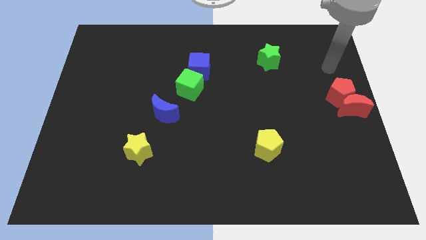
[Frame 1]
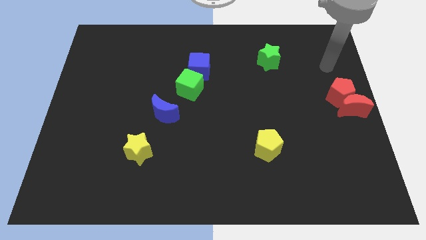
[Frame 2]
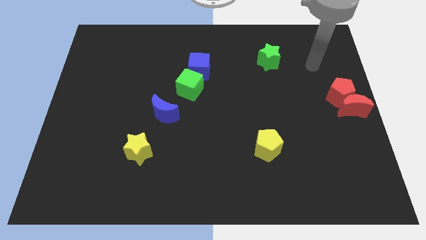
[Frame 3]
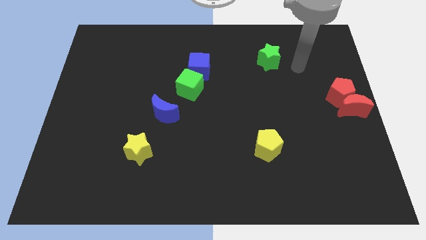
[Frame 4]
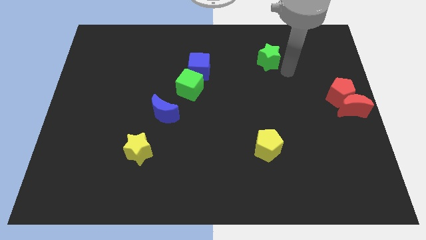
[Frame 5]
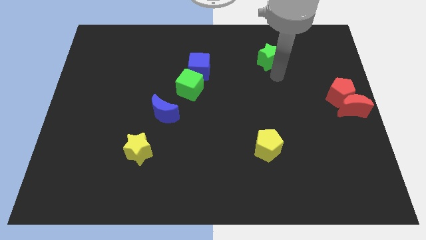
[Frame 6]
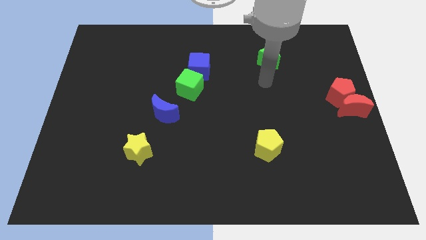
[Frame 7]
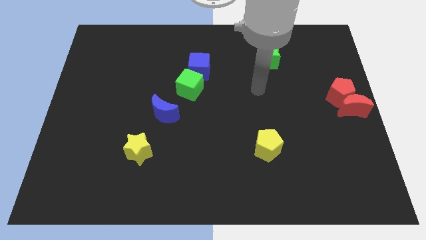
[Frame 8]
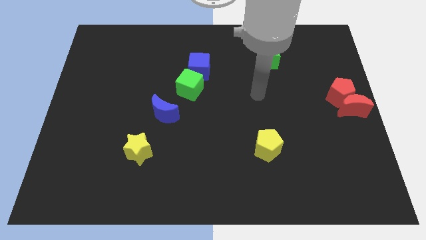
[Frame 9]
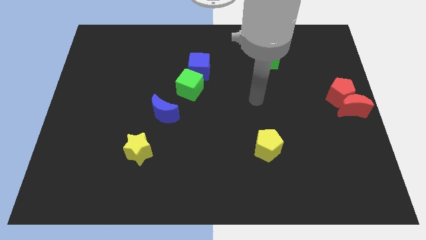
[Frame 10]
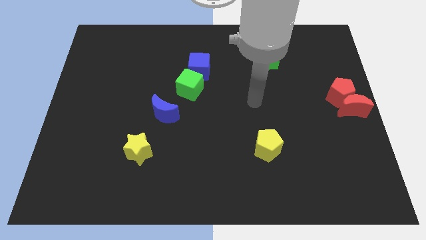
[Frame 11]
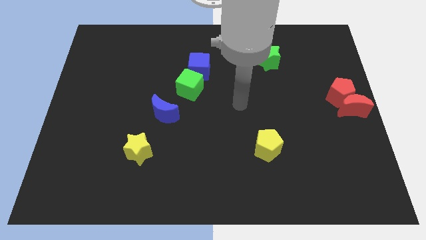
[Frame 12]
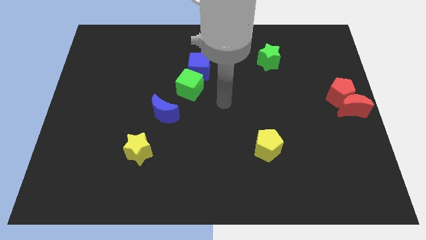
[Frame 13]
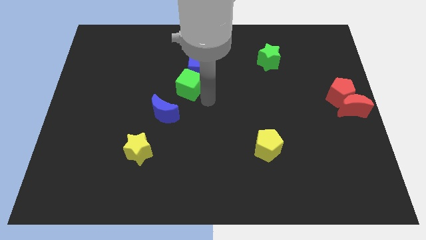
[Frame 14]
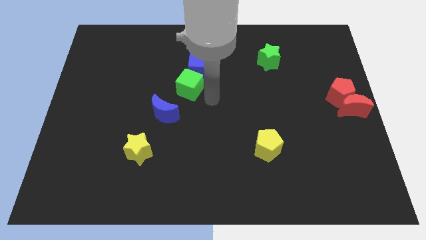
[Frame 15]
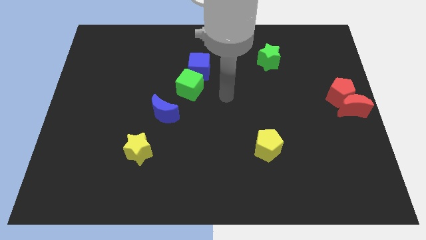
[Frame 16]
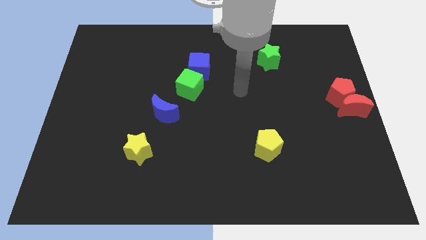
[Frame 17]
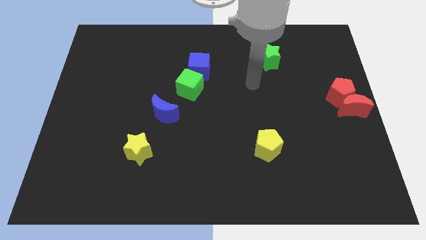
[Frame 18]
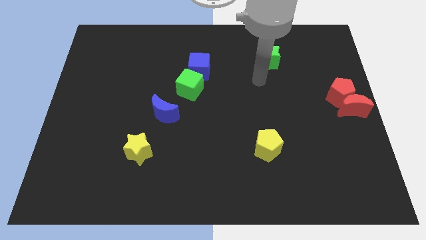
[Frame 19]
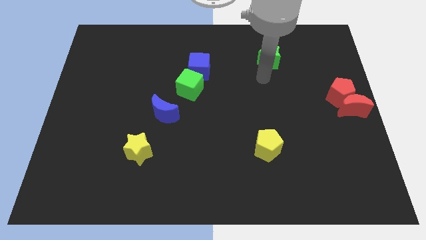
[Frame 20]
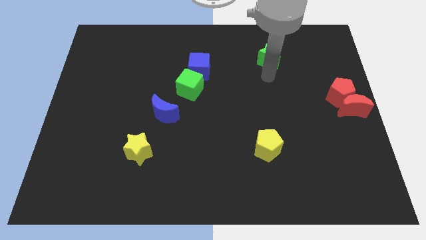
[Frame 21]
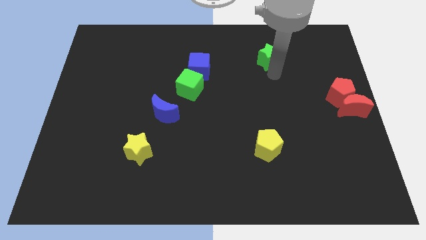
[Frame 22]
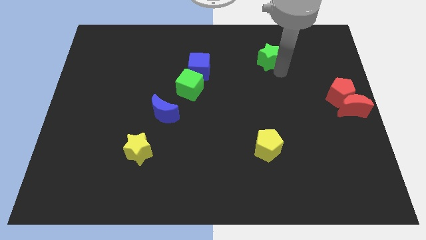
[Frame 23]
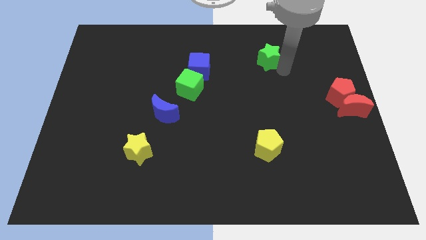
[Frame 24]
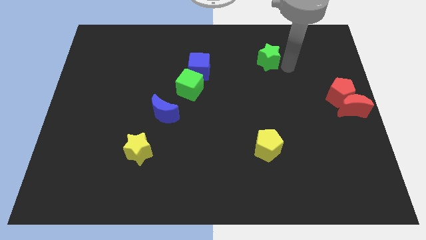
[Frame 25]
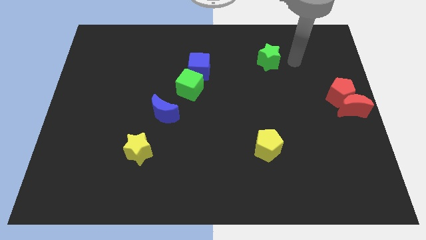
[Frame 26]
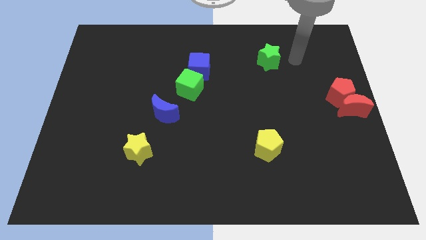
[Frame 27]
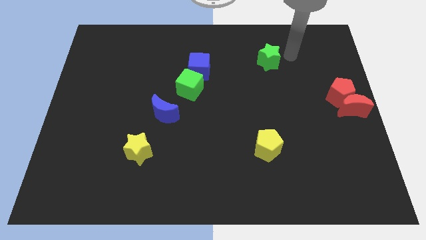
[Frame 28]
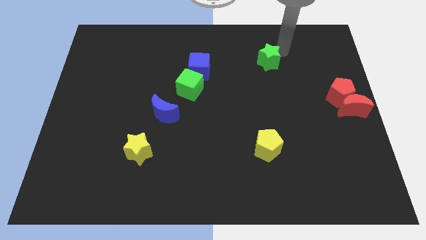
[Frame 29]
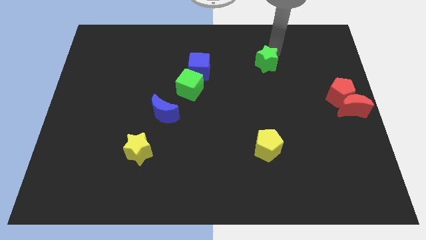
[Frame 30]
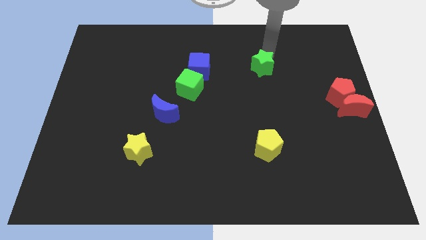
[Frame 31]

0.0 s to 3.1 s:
tap green star on top right

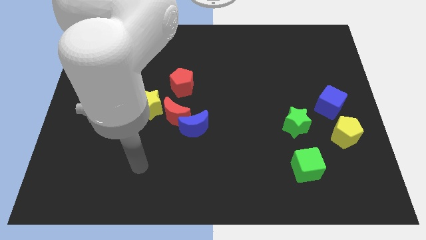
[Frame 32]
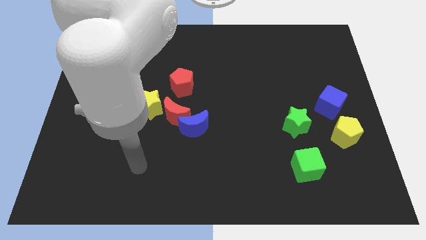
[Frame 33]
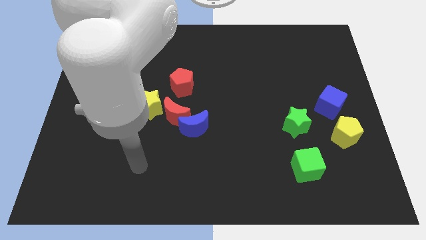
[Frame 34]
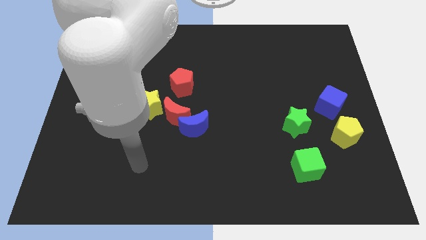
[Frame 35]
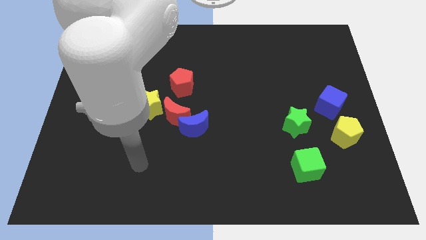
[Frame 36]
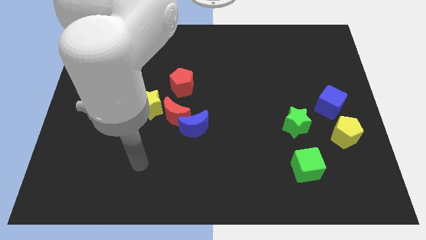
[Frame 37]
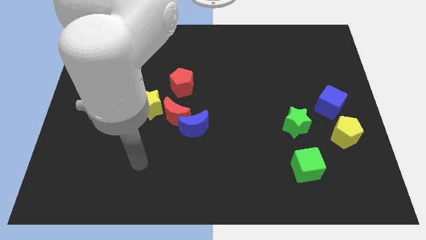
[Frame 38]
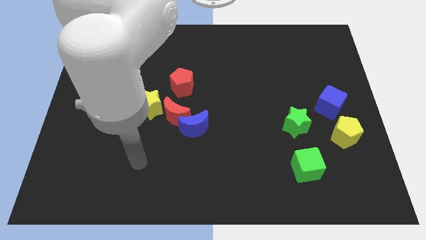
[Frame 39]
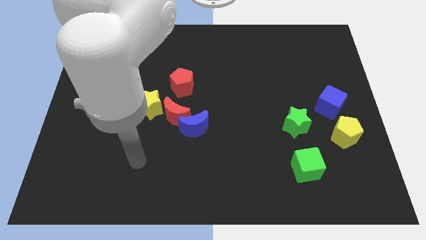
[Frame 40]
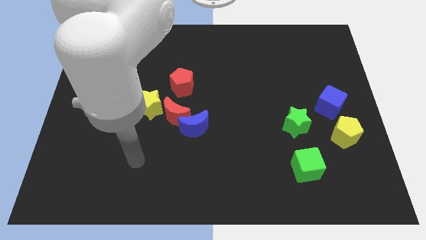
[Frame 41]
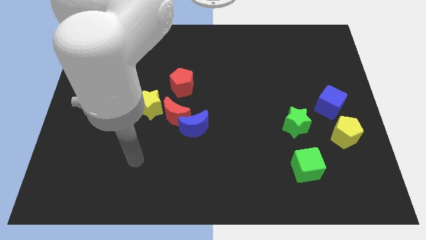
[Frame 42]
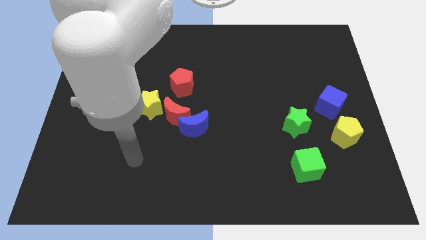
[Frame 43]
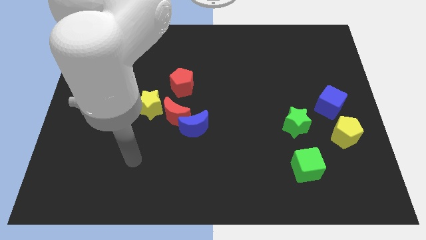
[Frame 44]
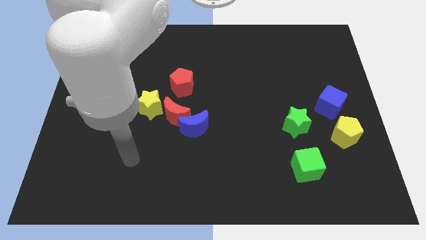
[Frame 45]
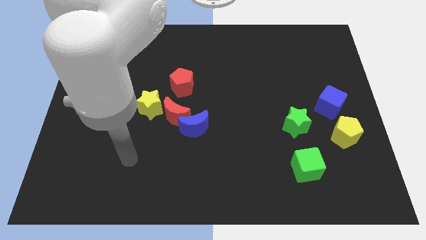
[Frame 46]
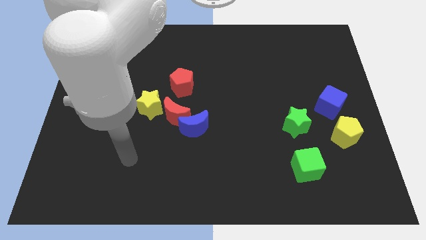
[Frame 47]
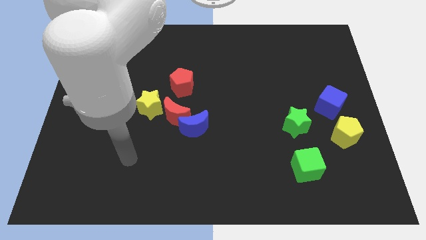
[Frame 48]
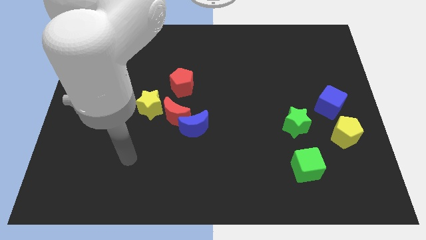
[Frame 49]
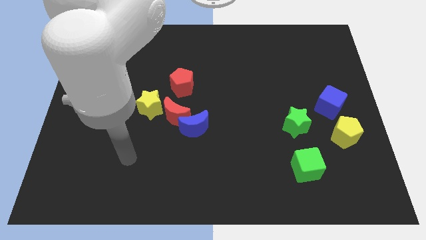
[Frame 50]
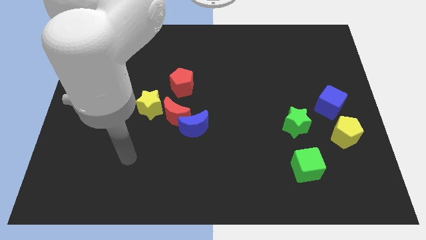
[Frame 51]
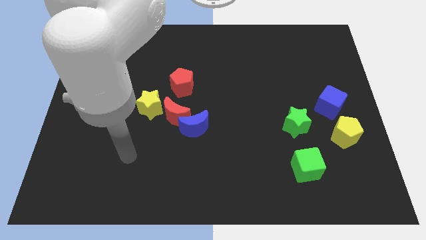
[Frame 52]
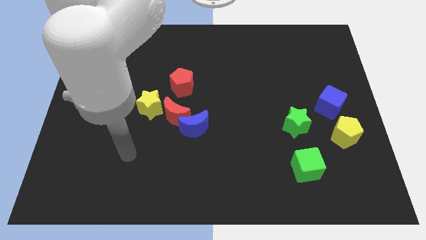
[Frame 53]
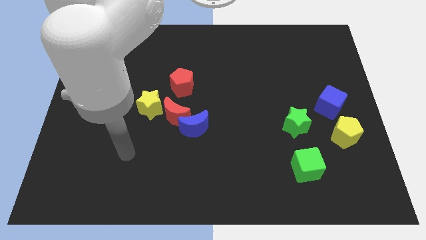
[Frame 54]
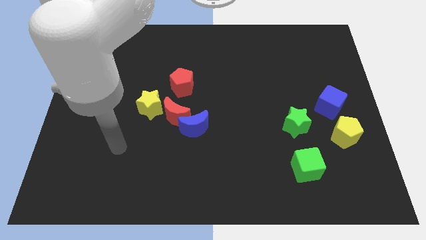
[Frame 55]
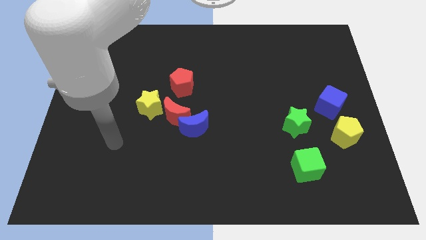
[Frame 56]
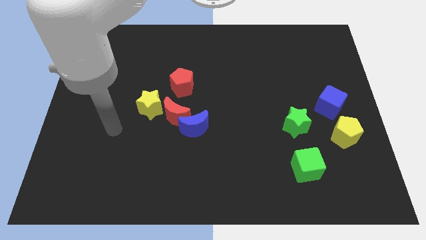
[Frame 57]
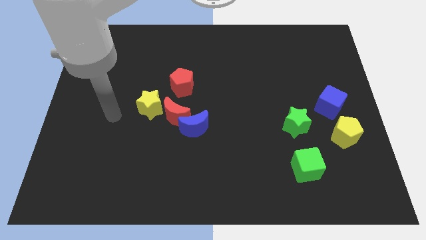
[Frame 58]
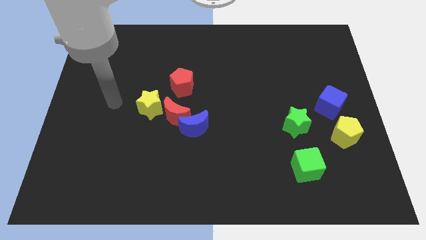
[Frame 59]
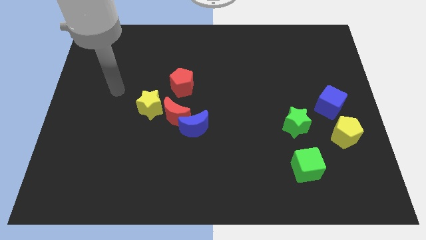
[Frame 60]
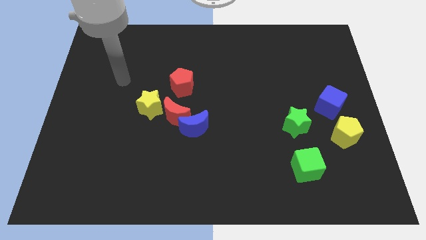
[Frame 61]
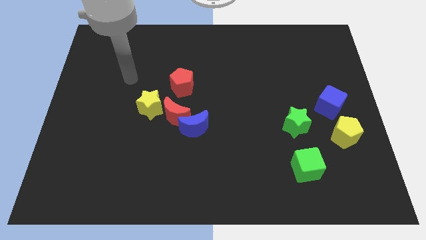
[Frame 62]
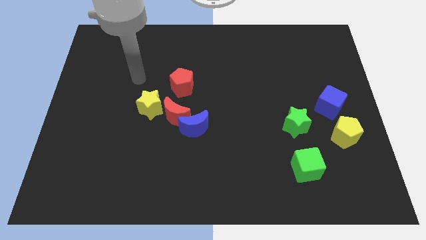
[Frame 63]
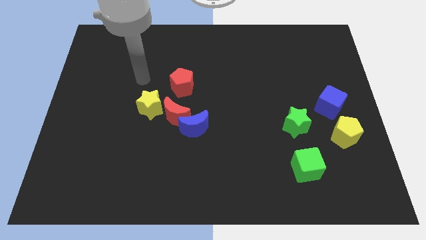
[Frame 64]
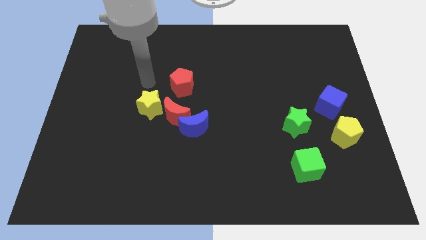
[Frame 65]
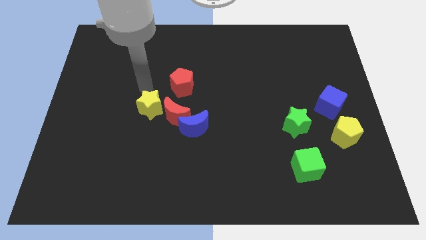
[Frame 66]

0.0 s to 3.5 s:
move the arm to the top of the yellow star

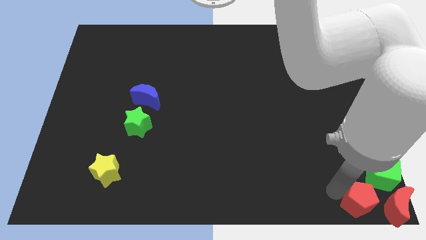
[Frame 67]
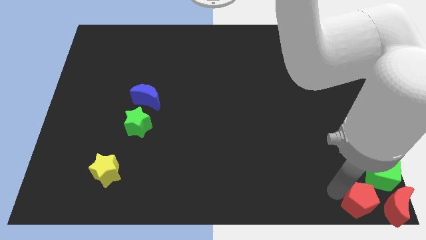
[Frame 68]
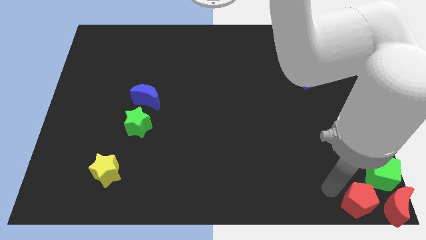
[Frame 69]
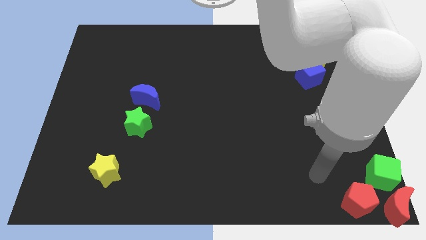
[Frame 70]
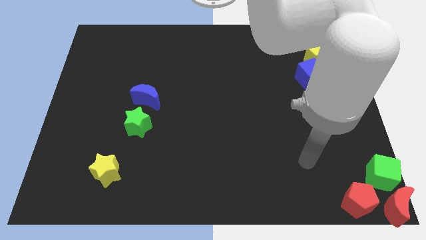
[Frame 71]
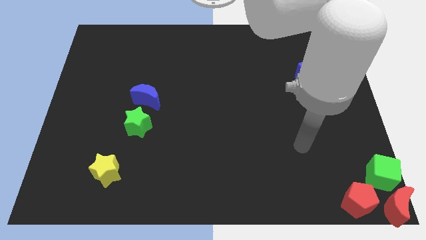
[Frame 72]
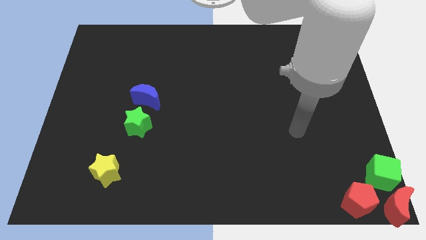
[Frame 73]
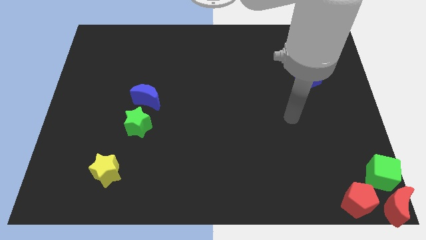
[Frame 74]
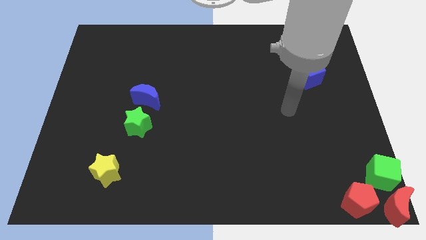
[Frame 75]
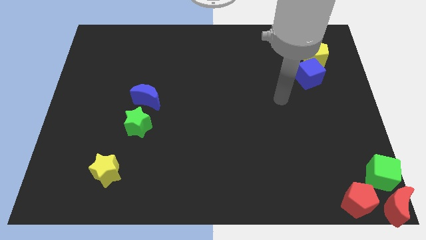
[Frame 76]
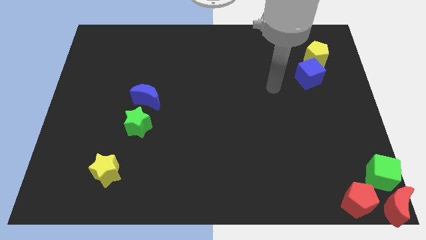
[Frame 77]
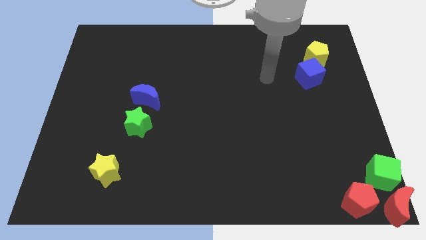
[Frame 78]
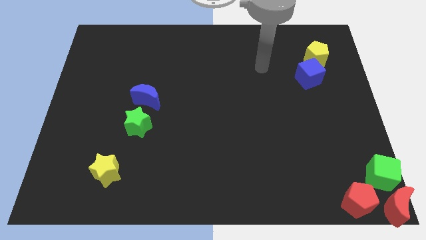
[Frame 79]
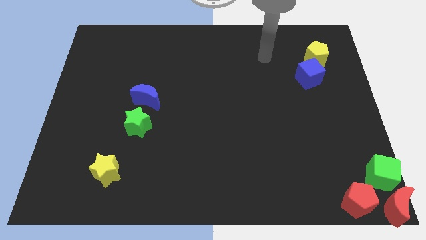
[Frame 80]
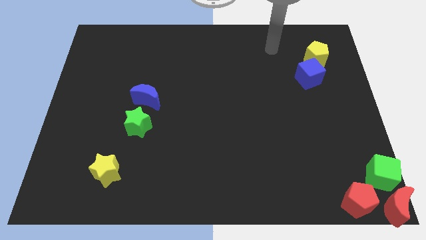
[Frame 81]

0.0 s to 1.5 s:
move the arm away from the red pentagon

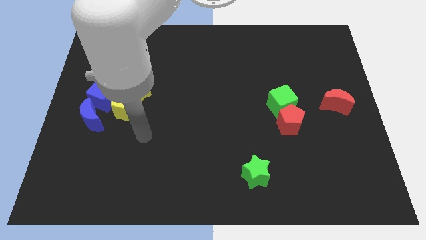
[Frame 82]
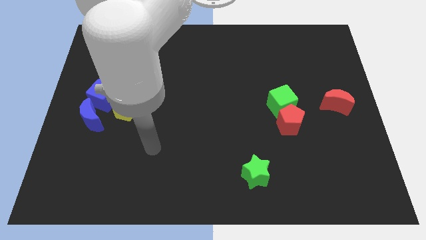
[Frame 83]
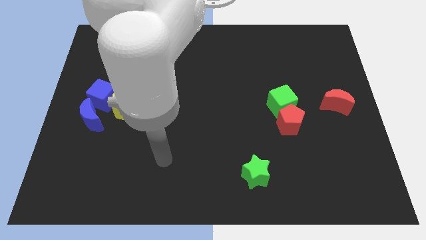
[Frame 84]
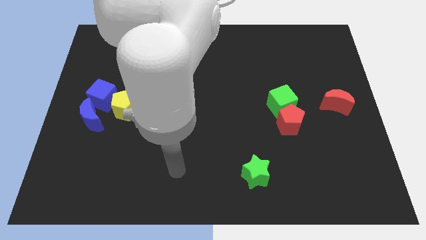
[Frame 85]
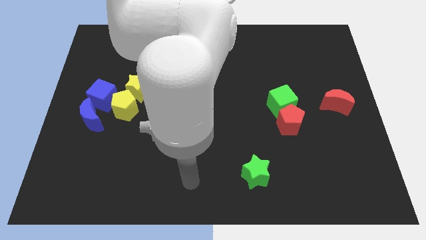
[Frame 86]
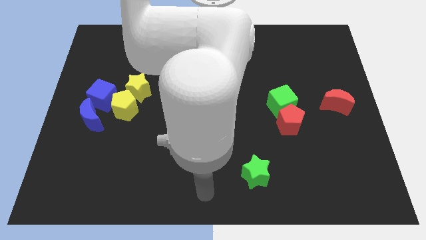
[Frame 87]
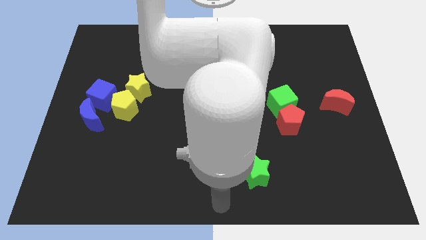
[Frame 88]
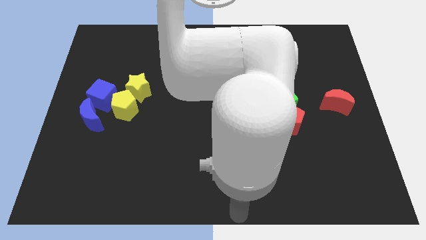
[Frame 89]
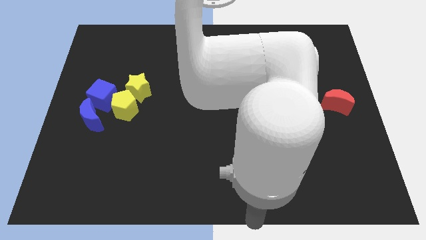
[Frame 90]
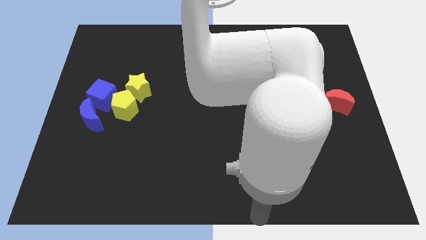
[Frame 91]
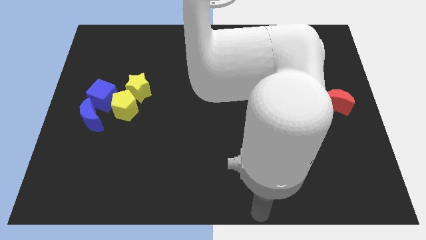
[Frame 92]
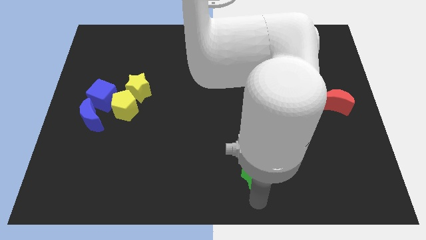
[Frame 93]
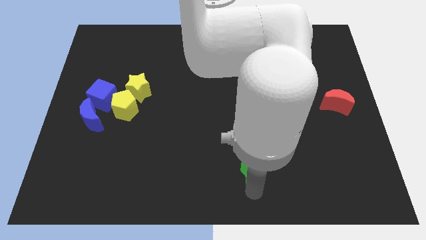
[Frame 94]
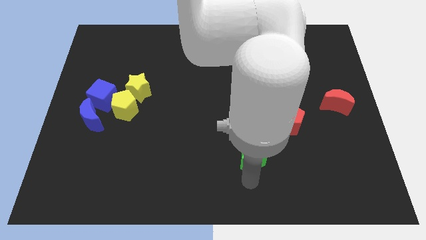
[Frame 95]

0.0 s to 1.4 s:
tap the green star
